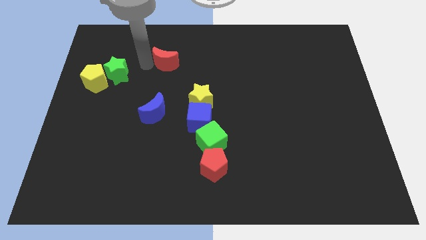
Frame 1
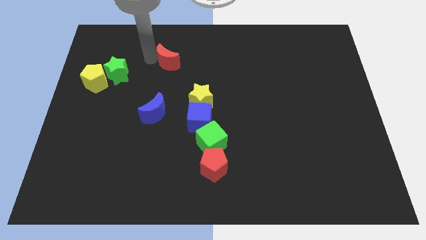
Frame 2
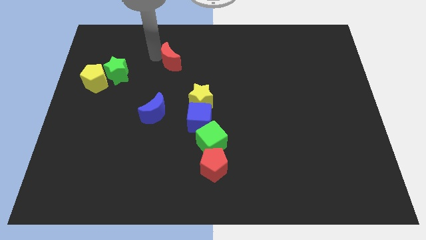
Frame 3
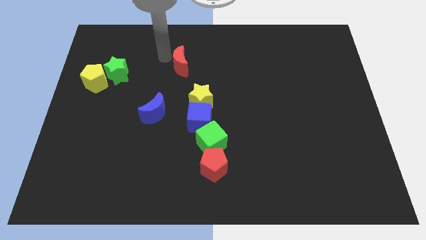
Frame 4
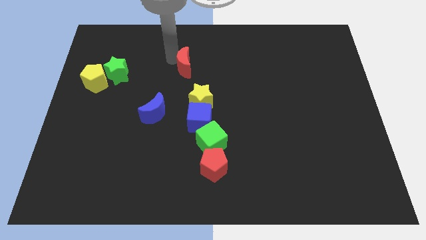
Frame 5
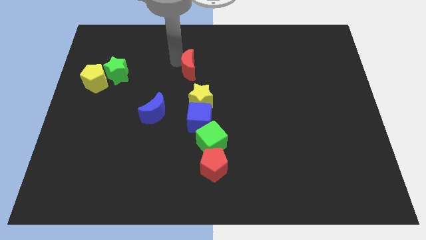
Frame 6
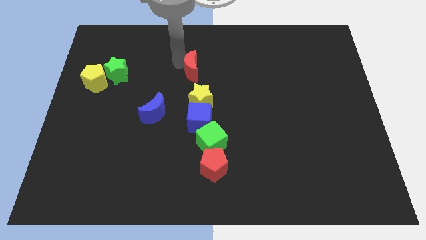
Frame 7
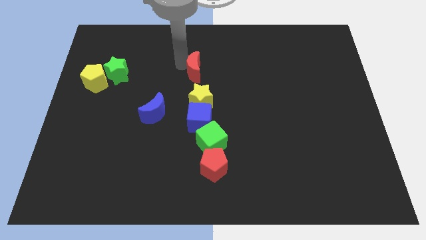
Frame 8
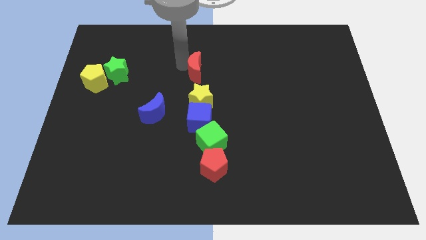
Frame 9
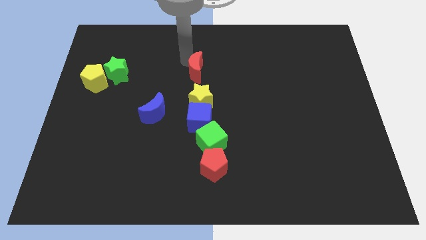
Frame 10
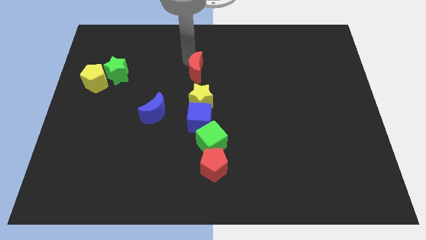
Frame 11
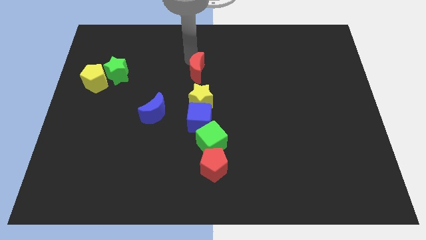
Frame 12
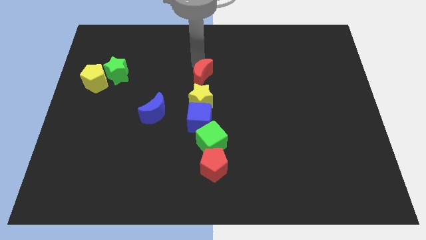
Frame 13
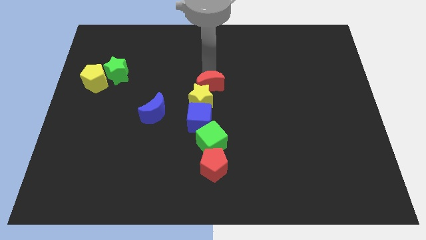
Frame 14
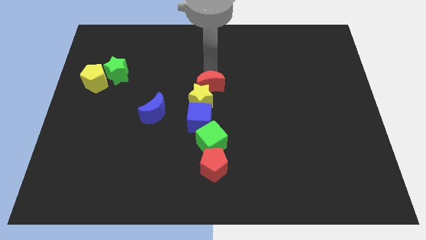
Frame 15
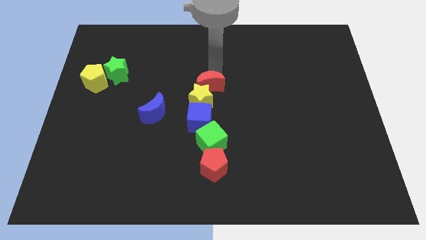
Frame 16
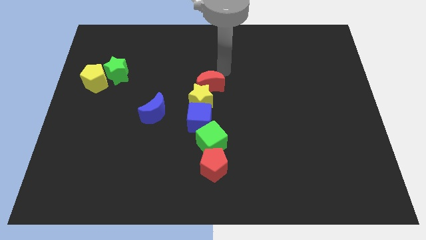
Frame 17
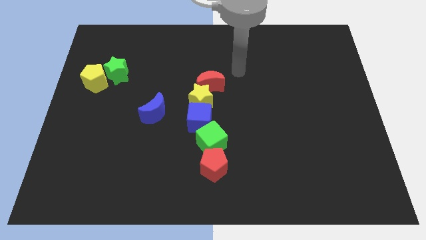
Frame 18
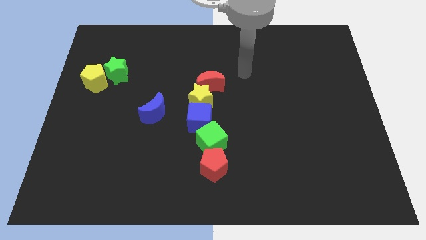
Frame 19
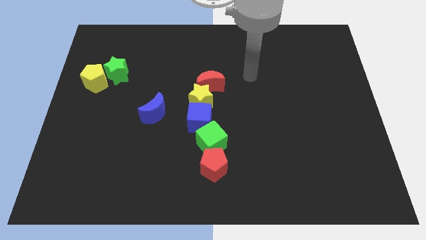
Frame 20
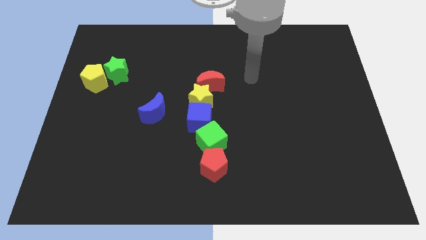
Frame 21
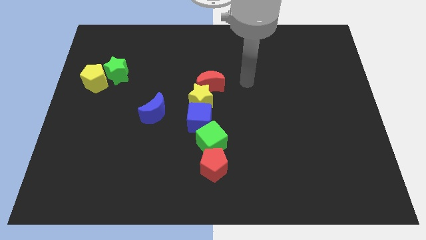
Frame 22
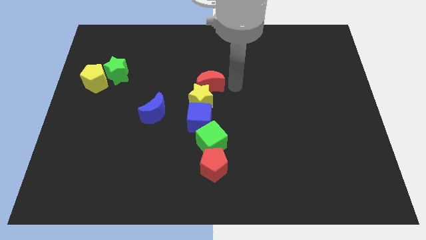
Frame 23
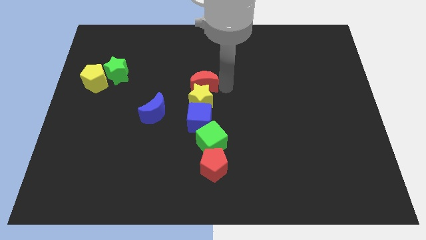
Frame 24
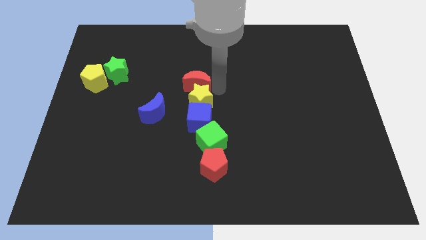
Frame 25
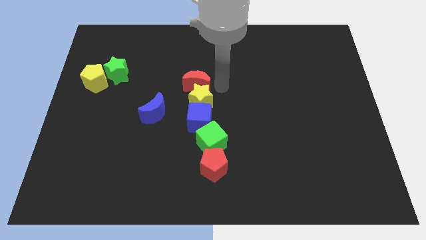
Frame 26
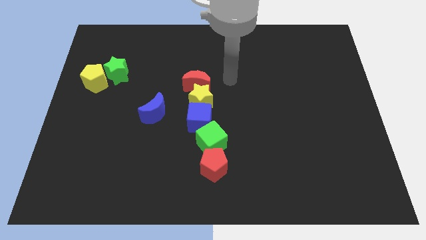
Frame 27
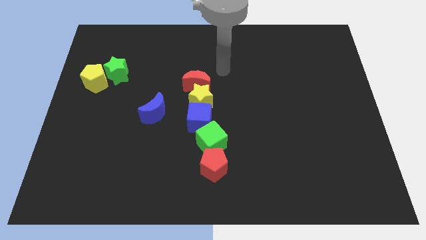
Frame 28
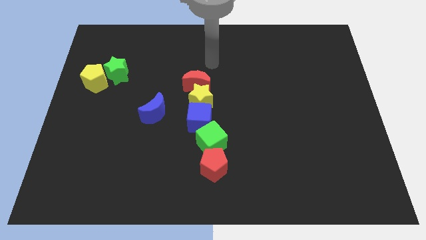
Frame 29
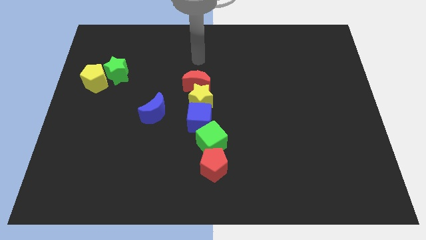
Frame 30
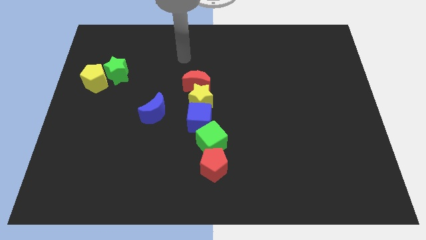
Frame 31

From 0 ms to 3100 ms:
place the red moon to the top of the yellow star

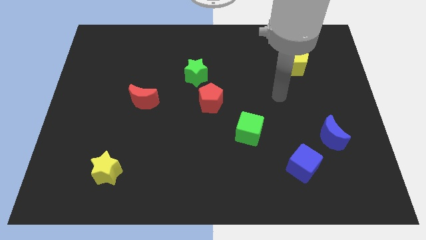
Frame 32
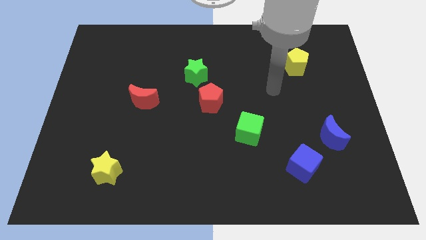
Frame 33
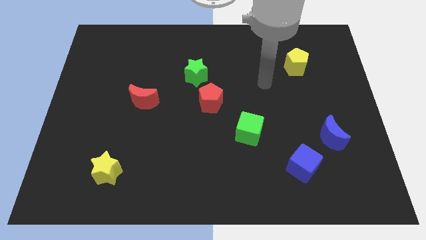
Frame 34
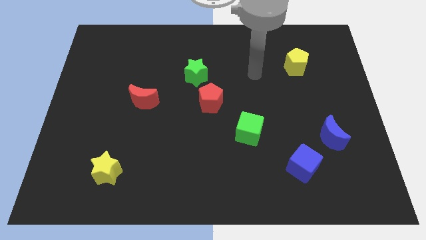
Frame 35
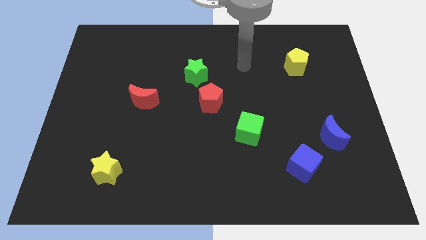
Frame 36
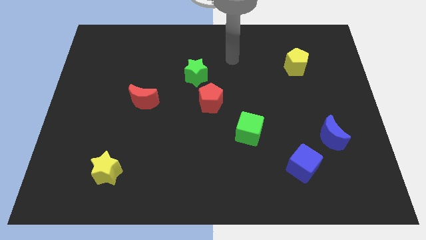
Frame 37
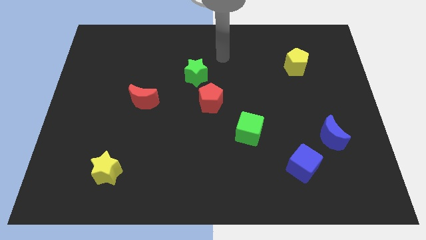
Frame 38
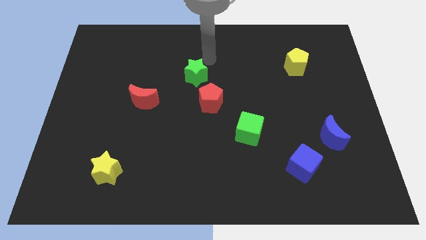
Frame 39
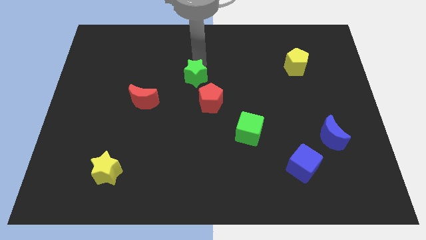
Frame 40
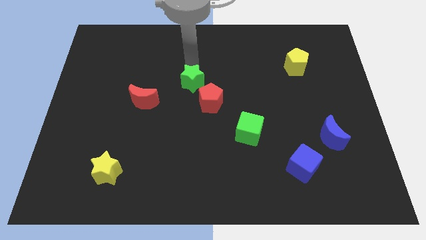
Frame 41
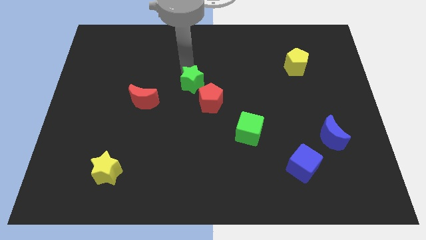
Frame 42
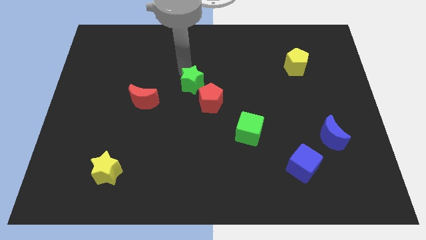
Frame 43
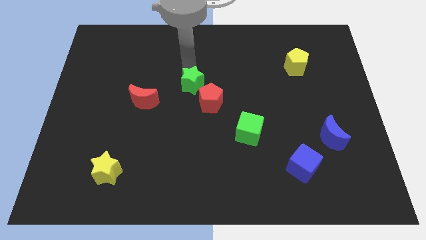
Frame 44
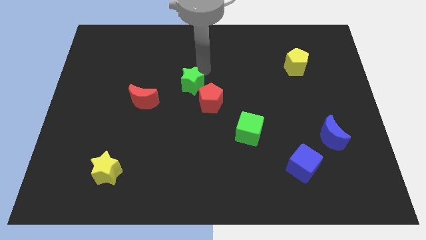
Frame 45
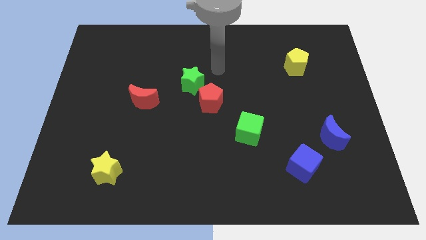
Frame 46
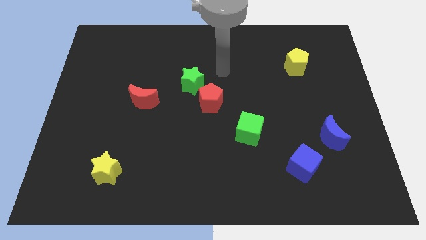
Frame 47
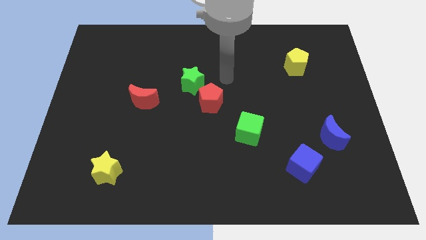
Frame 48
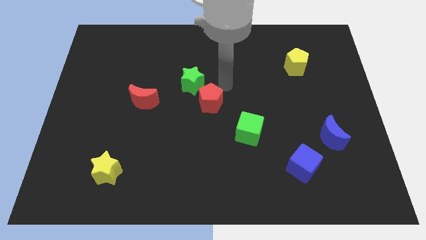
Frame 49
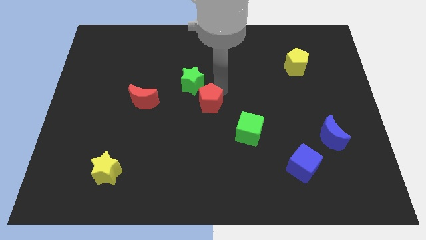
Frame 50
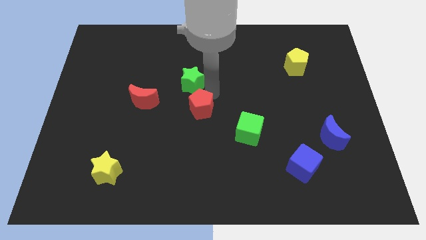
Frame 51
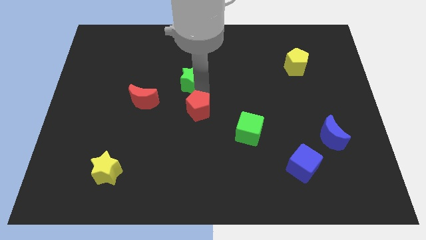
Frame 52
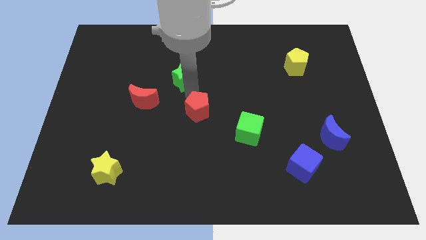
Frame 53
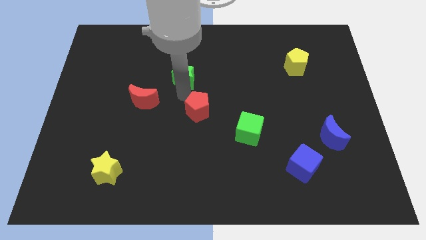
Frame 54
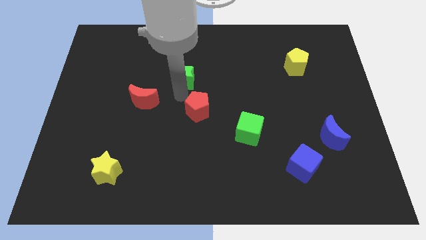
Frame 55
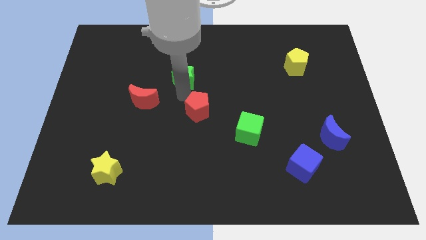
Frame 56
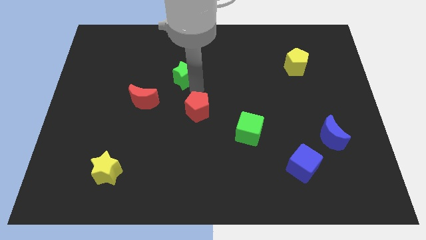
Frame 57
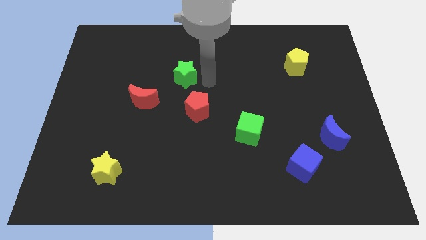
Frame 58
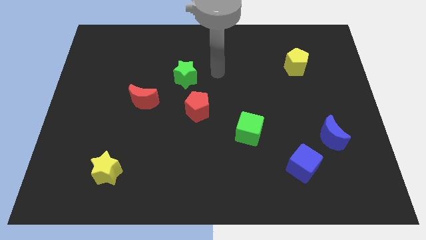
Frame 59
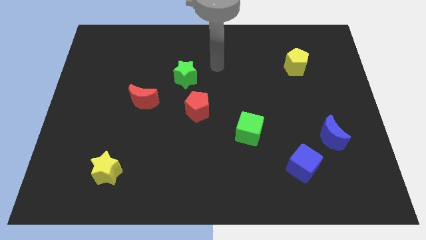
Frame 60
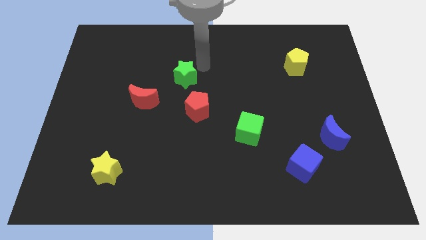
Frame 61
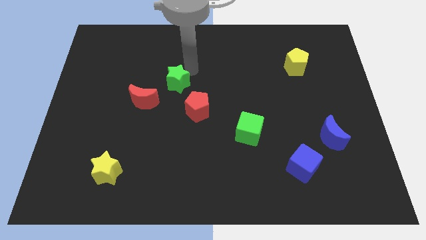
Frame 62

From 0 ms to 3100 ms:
disturb the green star red pentagon

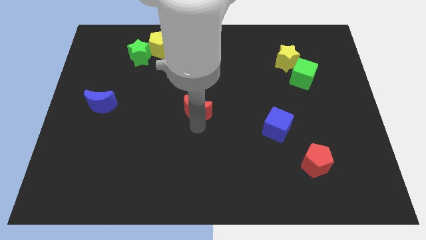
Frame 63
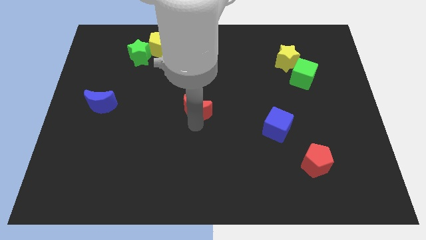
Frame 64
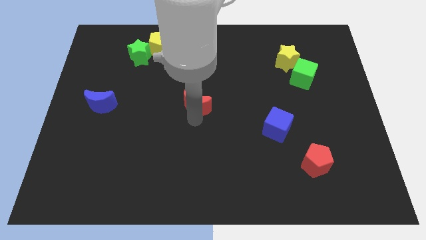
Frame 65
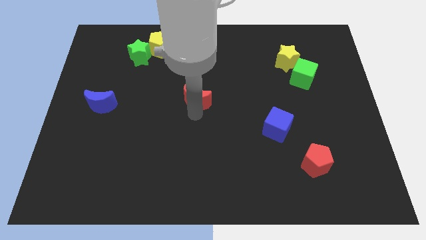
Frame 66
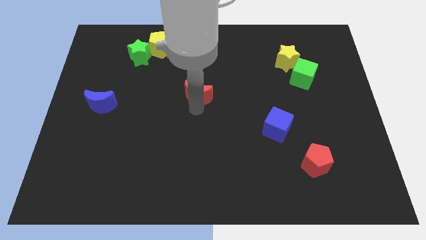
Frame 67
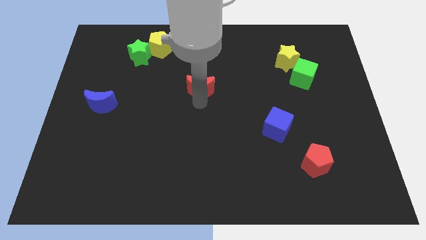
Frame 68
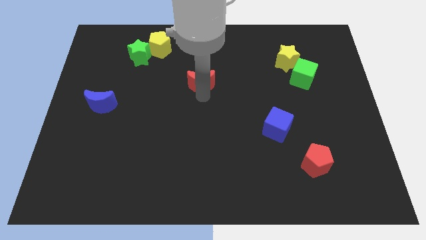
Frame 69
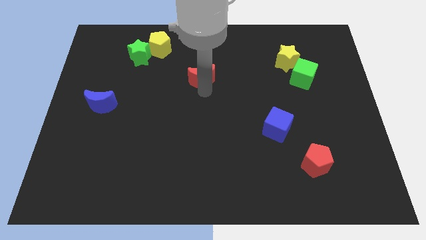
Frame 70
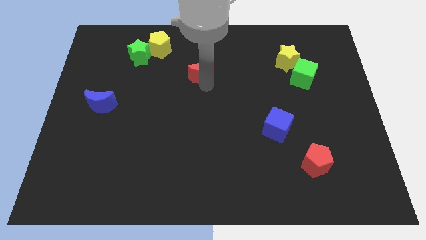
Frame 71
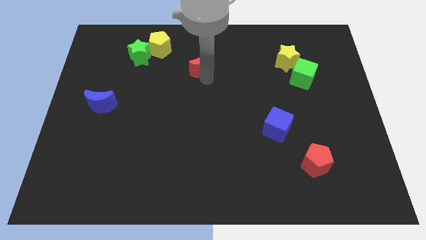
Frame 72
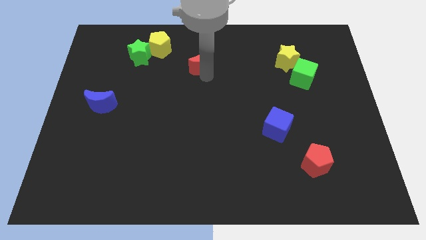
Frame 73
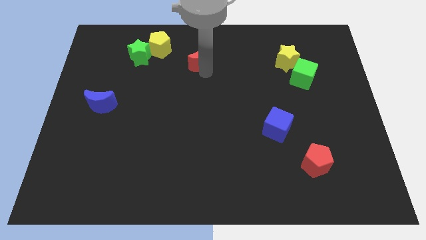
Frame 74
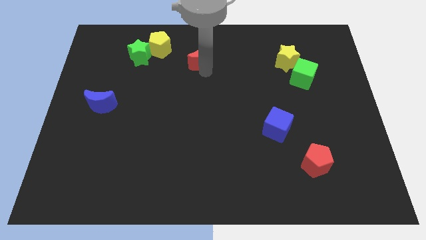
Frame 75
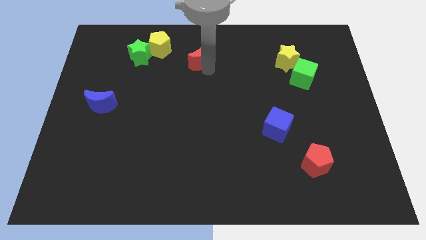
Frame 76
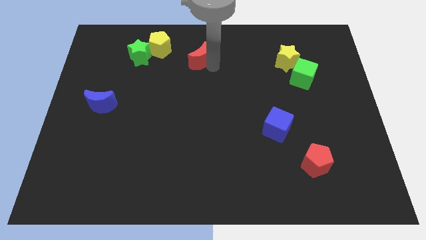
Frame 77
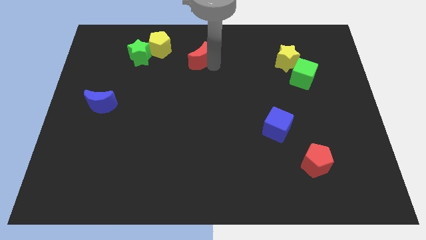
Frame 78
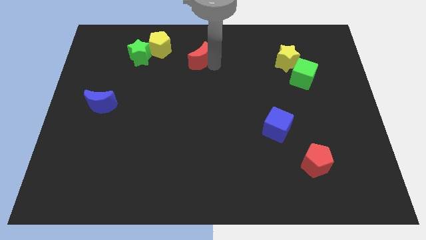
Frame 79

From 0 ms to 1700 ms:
push the red moon upwards a bit

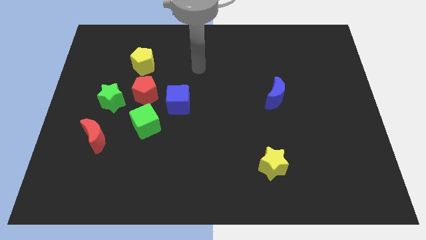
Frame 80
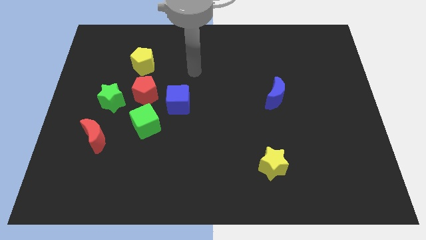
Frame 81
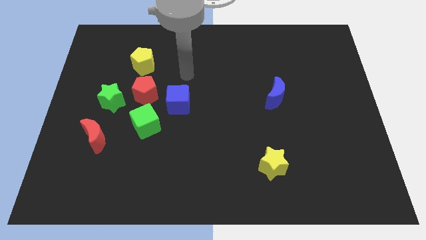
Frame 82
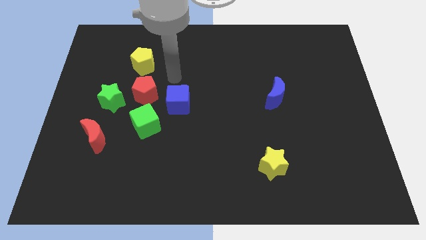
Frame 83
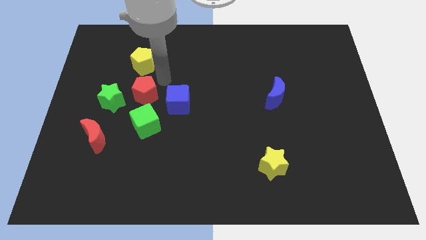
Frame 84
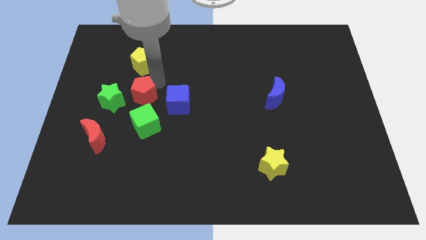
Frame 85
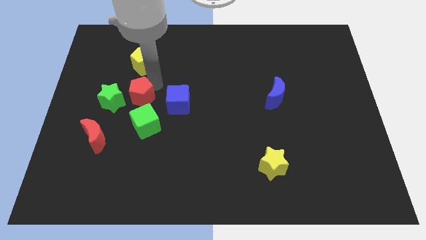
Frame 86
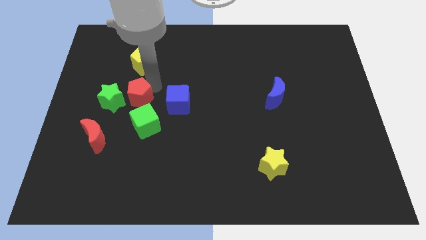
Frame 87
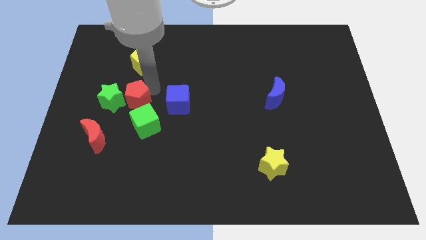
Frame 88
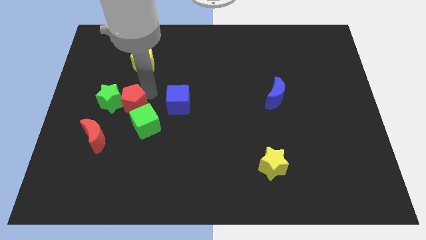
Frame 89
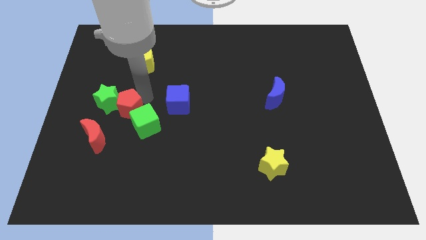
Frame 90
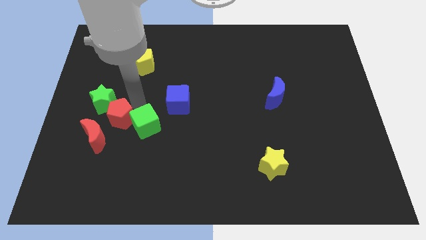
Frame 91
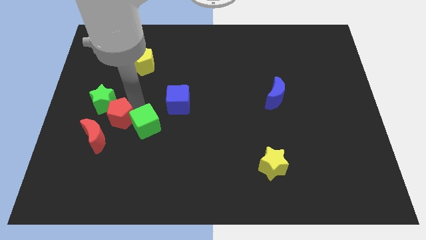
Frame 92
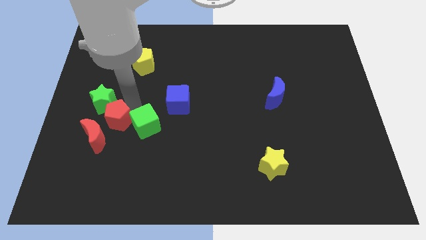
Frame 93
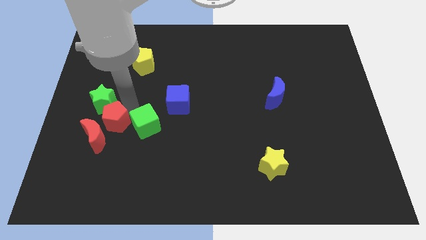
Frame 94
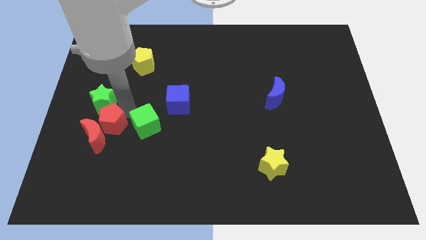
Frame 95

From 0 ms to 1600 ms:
slide the red pentagon diagonally bottom right to the green star
